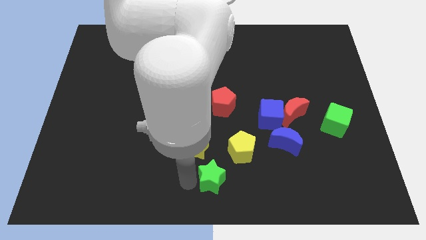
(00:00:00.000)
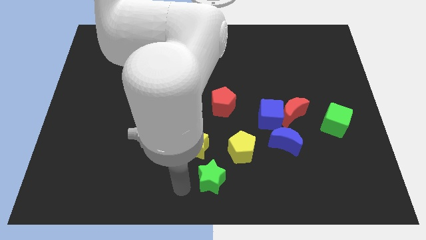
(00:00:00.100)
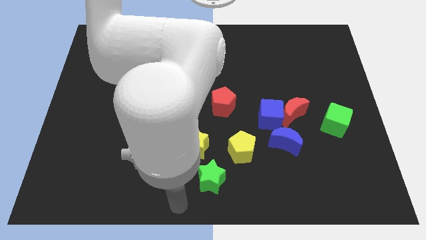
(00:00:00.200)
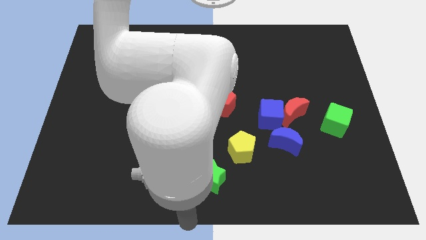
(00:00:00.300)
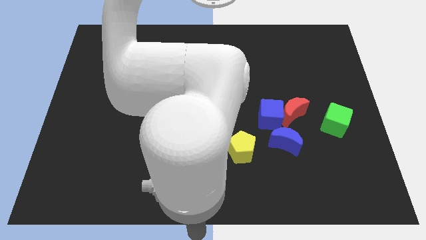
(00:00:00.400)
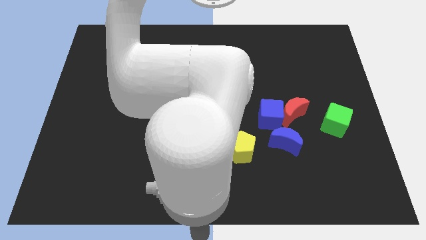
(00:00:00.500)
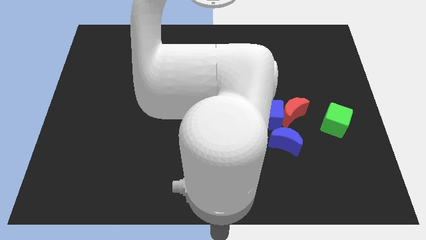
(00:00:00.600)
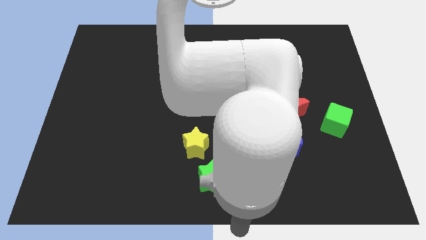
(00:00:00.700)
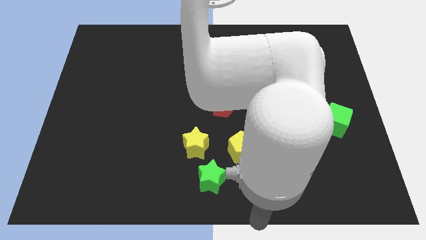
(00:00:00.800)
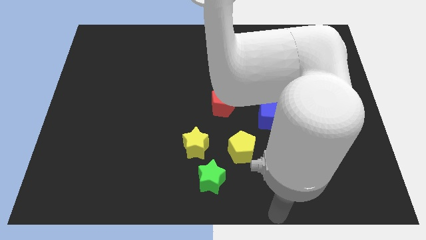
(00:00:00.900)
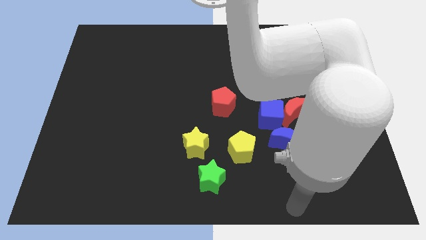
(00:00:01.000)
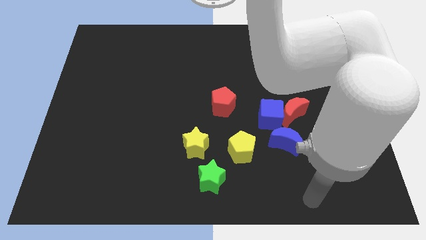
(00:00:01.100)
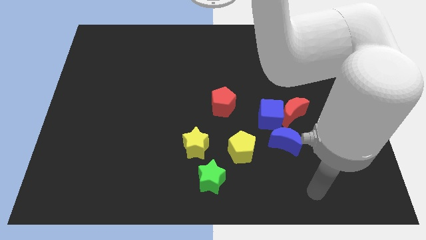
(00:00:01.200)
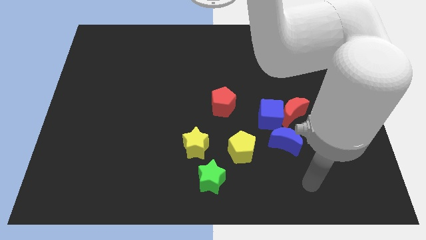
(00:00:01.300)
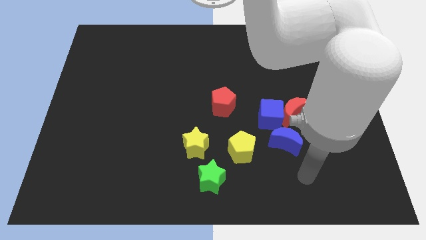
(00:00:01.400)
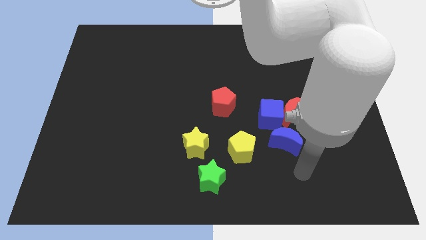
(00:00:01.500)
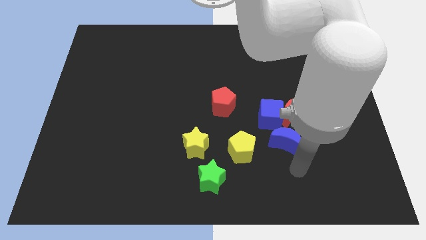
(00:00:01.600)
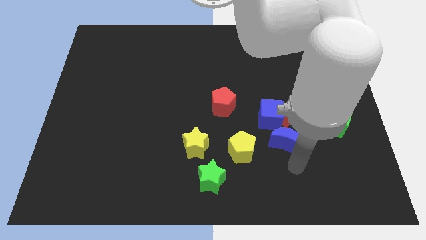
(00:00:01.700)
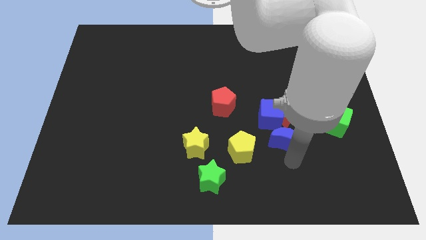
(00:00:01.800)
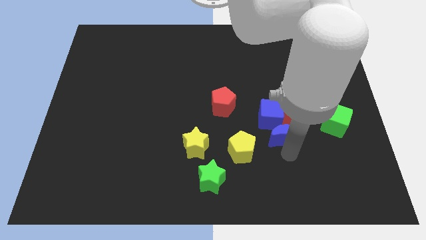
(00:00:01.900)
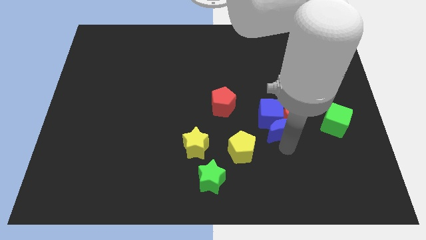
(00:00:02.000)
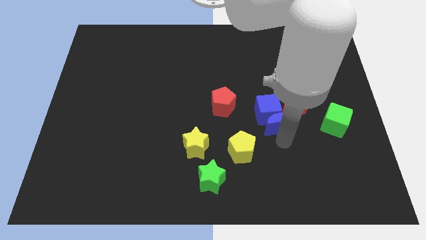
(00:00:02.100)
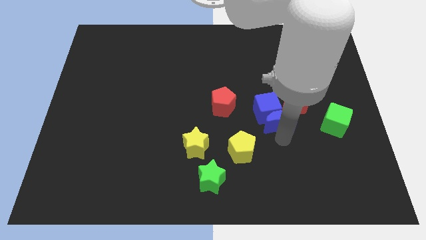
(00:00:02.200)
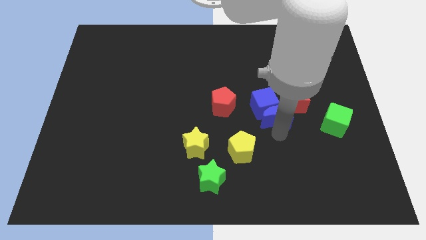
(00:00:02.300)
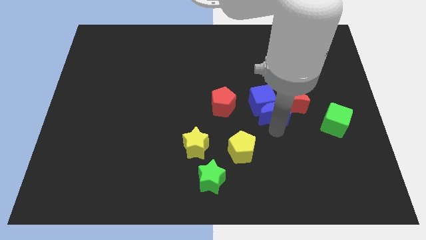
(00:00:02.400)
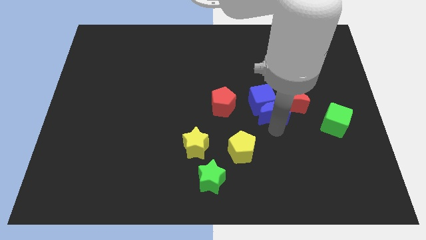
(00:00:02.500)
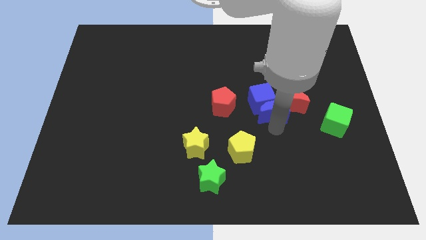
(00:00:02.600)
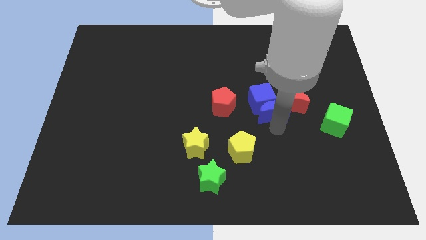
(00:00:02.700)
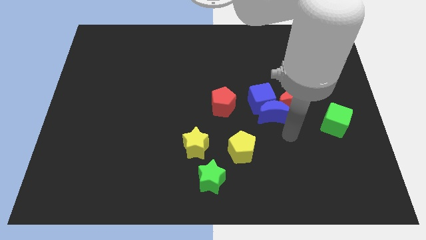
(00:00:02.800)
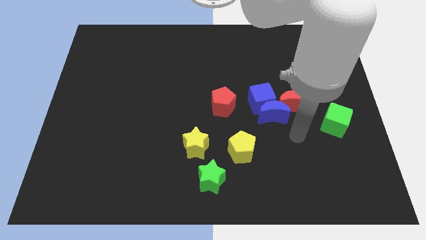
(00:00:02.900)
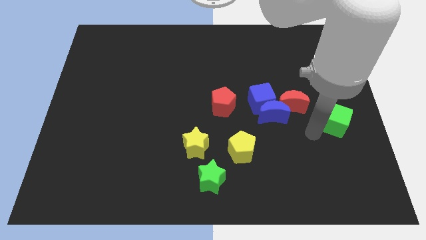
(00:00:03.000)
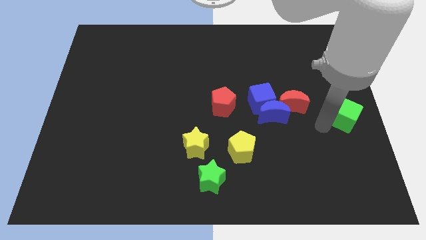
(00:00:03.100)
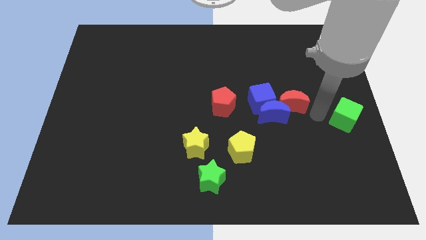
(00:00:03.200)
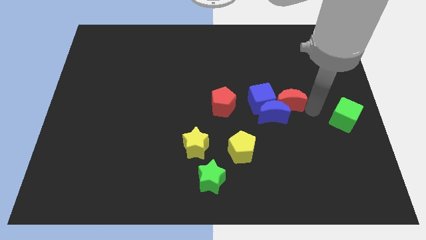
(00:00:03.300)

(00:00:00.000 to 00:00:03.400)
slightly push the blue moon into the blue cube

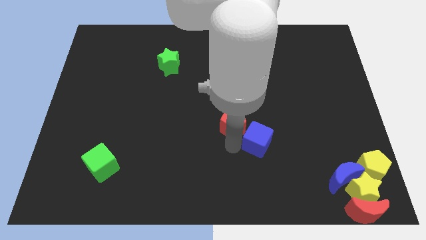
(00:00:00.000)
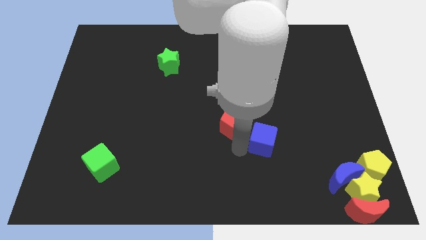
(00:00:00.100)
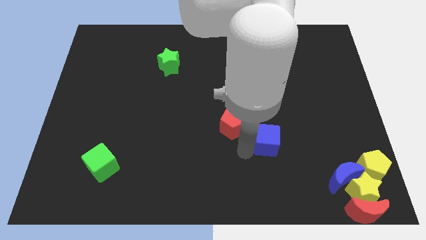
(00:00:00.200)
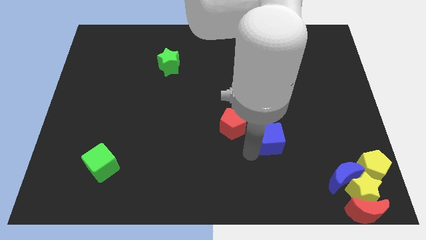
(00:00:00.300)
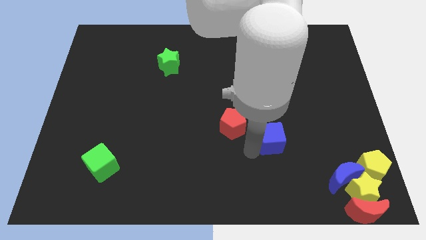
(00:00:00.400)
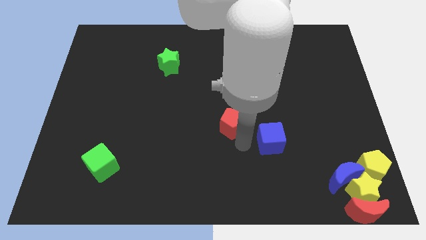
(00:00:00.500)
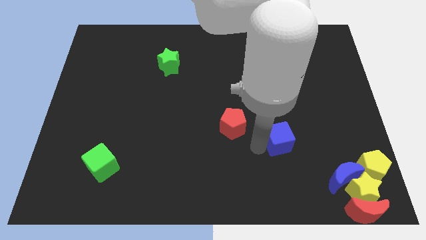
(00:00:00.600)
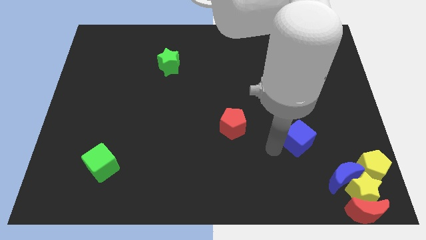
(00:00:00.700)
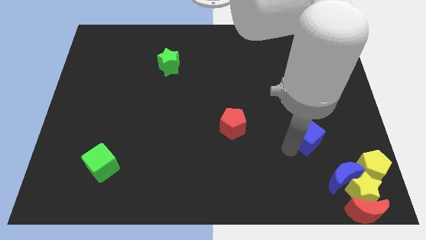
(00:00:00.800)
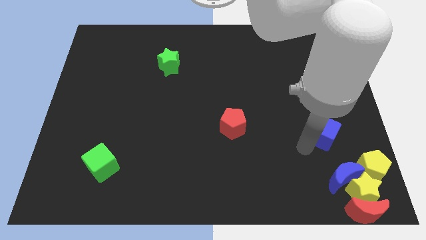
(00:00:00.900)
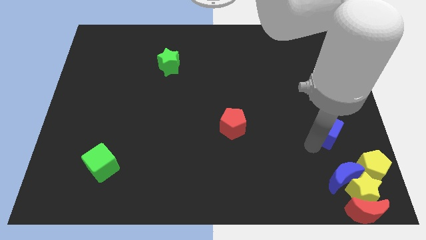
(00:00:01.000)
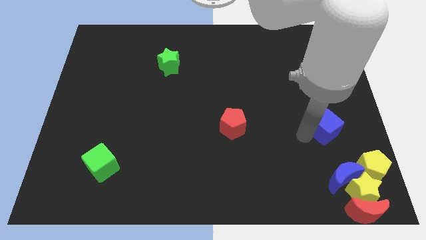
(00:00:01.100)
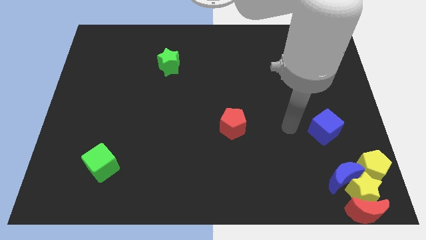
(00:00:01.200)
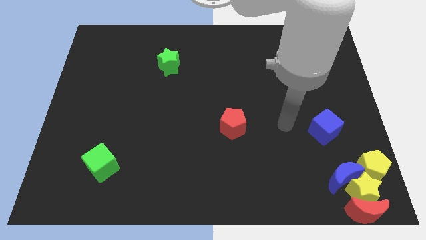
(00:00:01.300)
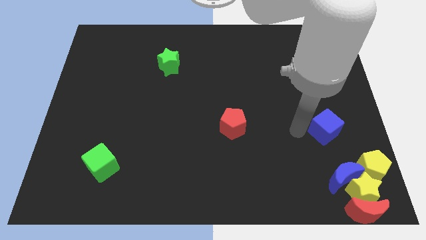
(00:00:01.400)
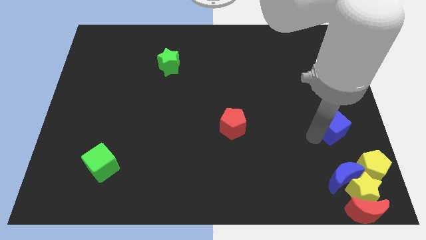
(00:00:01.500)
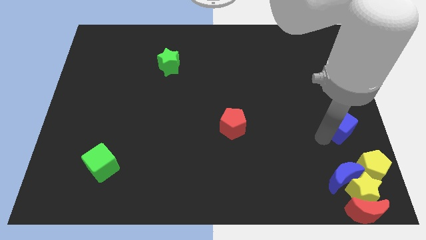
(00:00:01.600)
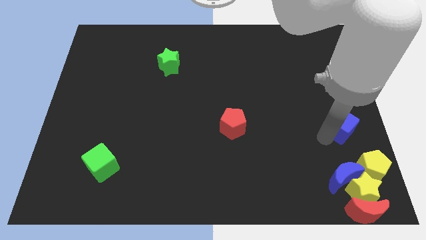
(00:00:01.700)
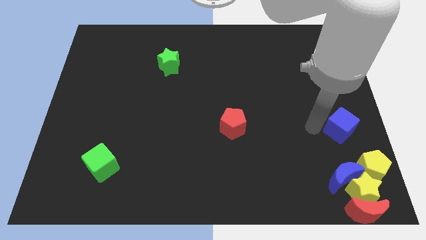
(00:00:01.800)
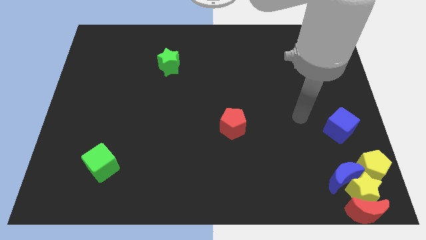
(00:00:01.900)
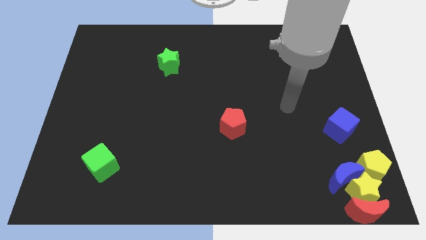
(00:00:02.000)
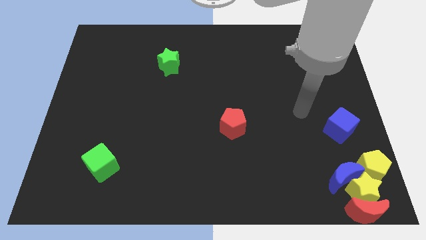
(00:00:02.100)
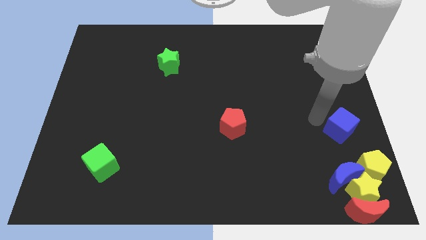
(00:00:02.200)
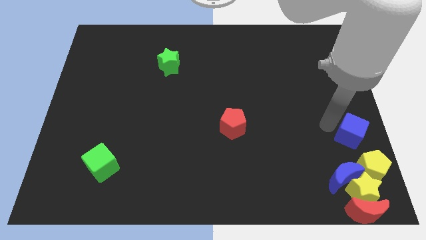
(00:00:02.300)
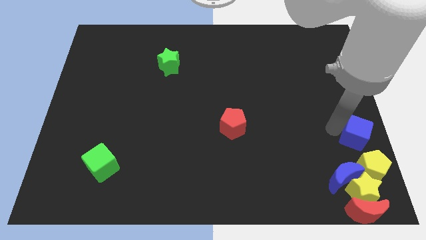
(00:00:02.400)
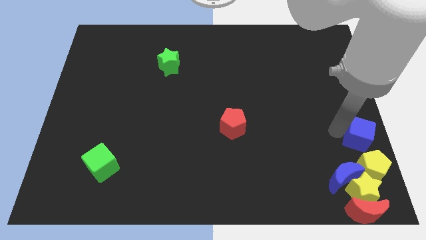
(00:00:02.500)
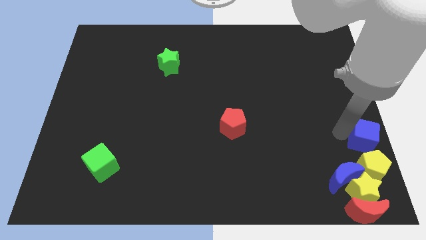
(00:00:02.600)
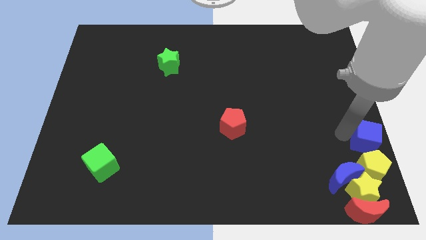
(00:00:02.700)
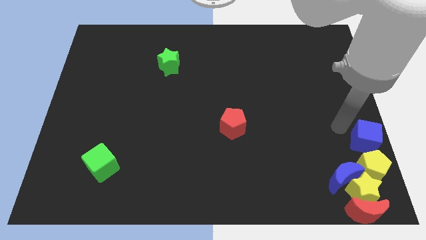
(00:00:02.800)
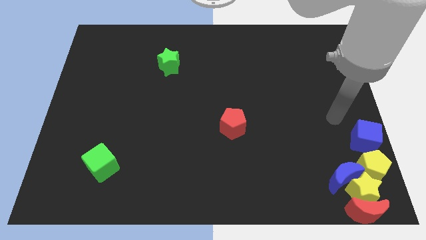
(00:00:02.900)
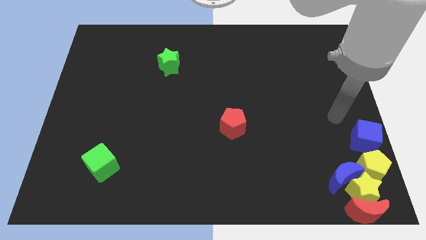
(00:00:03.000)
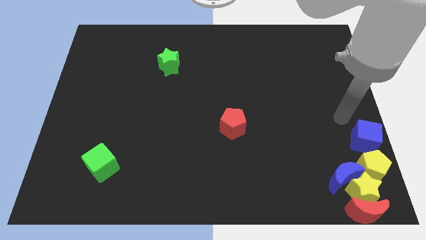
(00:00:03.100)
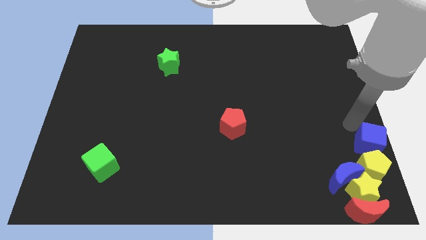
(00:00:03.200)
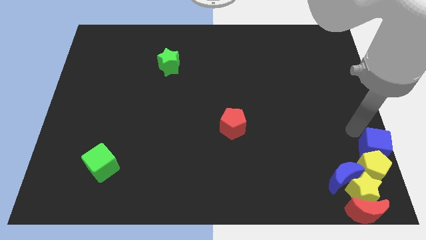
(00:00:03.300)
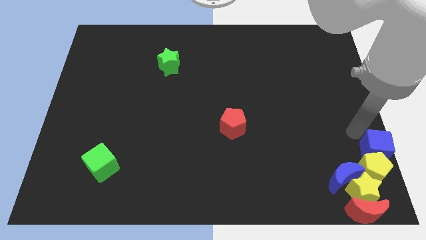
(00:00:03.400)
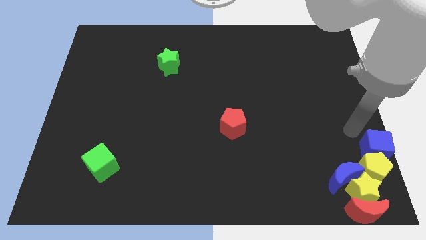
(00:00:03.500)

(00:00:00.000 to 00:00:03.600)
move the blue cube towards the top of yellow pentagon

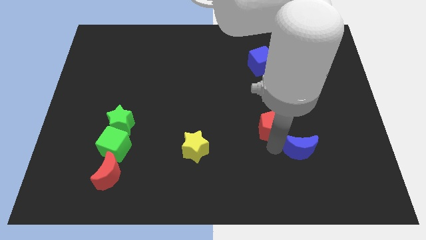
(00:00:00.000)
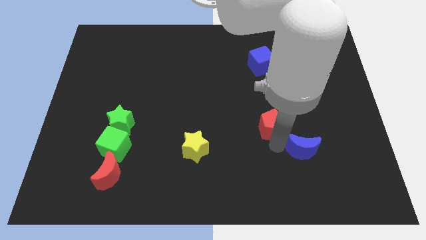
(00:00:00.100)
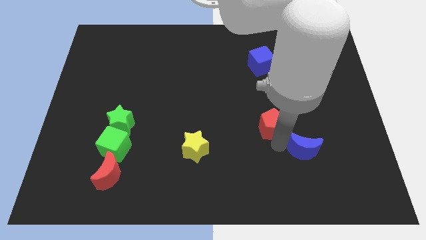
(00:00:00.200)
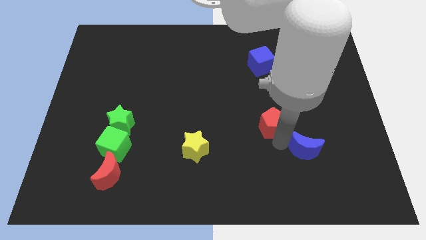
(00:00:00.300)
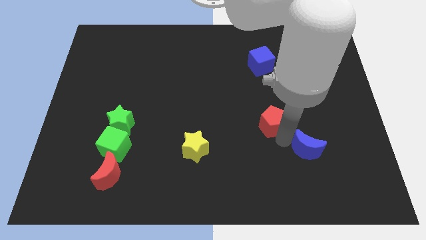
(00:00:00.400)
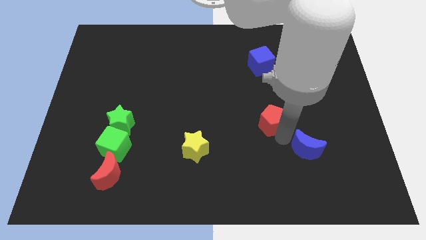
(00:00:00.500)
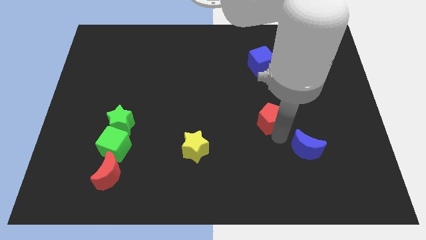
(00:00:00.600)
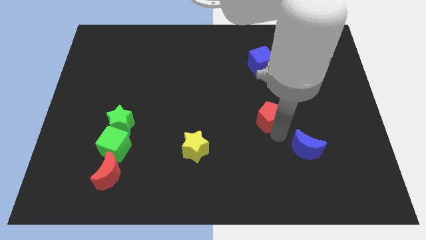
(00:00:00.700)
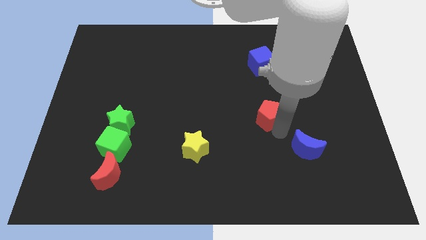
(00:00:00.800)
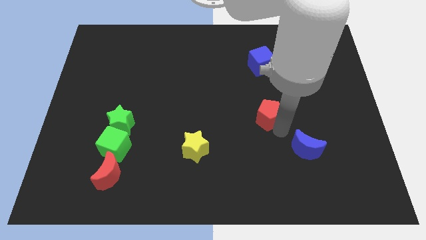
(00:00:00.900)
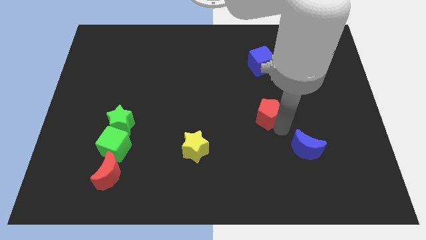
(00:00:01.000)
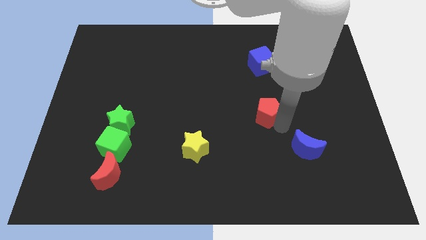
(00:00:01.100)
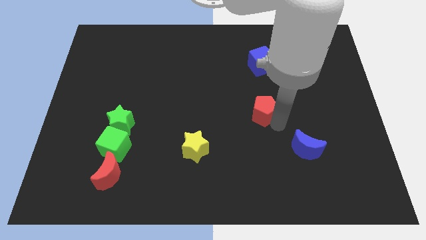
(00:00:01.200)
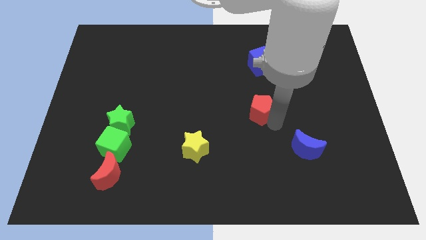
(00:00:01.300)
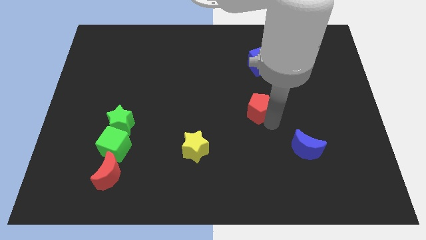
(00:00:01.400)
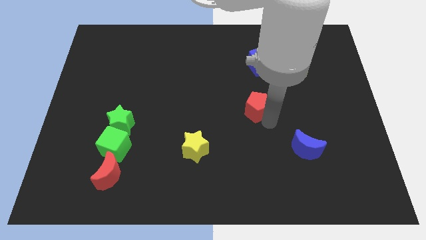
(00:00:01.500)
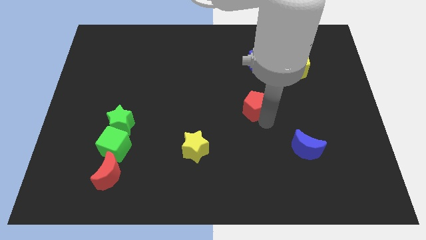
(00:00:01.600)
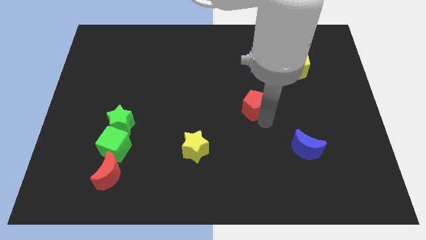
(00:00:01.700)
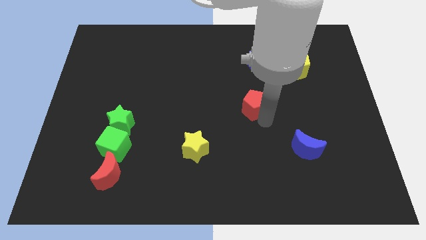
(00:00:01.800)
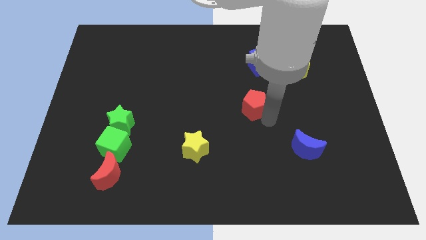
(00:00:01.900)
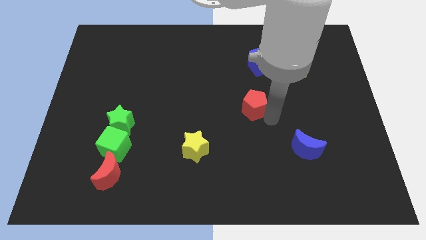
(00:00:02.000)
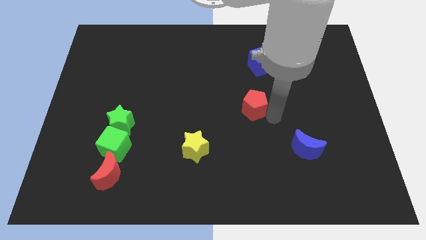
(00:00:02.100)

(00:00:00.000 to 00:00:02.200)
move red pentagon slightly towards the center of the board
